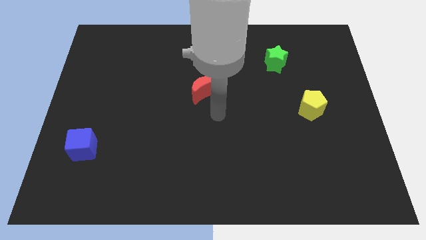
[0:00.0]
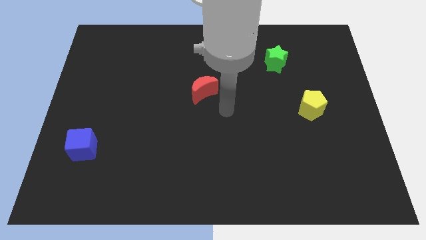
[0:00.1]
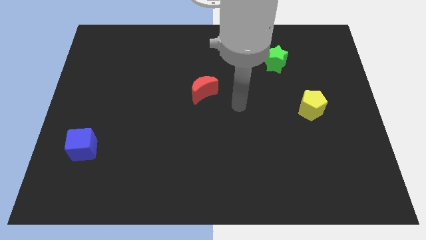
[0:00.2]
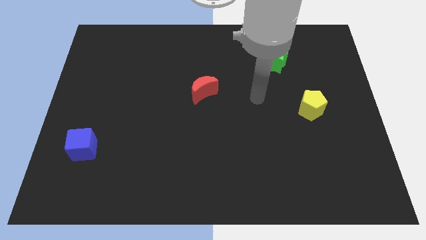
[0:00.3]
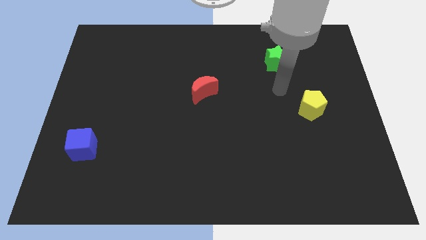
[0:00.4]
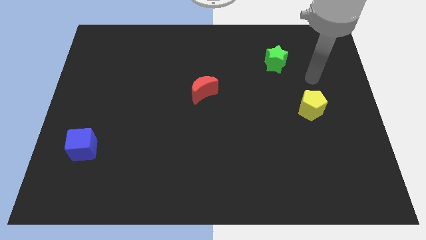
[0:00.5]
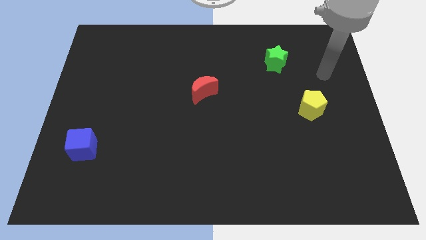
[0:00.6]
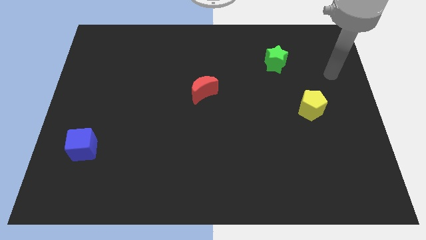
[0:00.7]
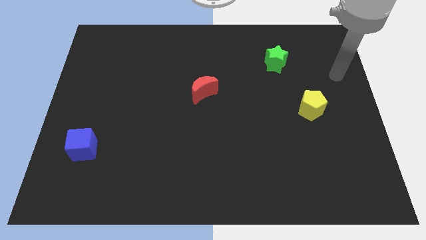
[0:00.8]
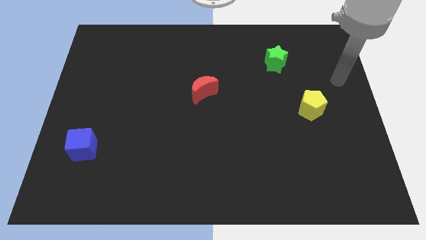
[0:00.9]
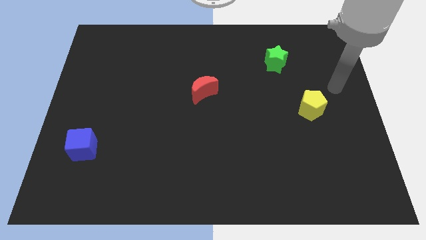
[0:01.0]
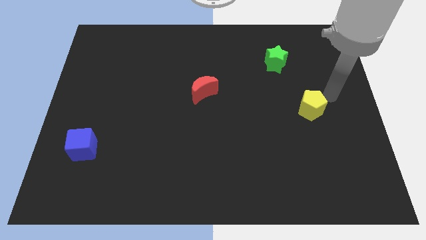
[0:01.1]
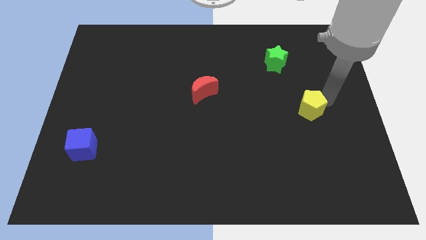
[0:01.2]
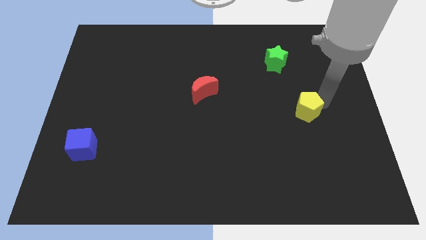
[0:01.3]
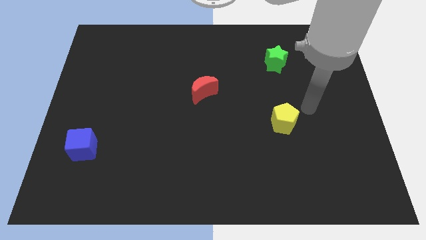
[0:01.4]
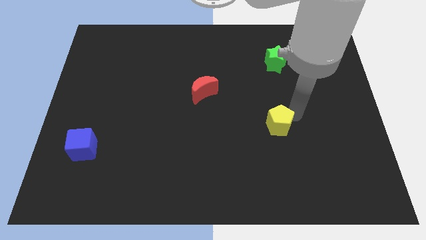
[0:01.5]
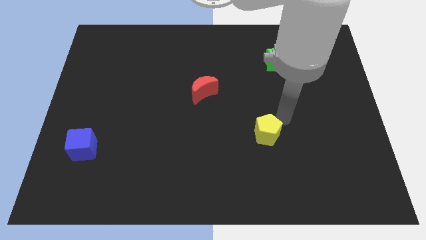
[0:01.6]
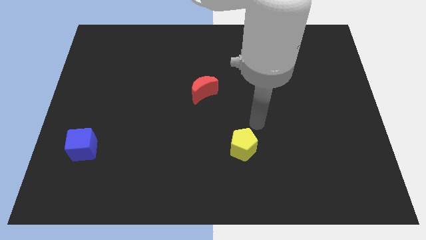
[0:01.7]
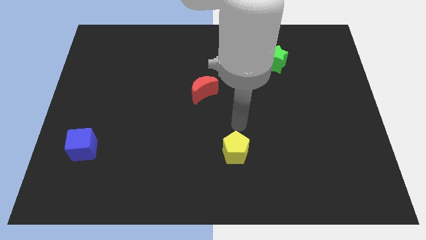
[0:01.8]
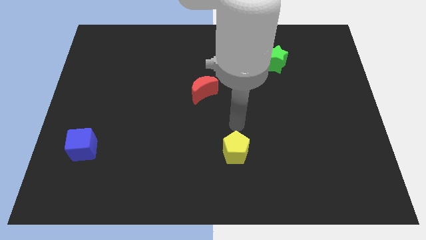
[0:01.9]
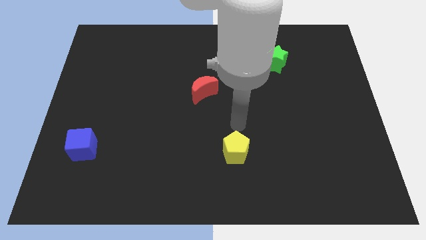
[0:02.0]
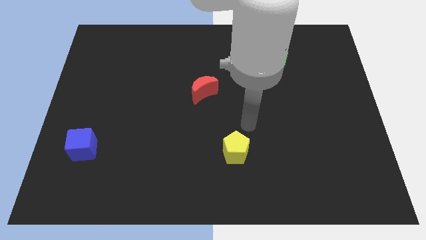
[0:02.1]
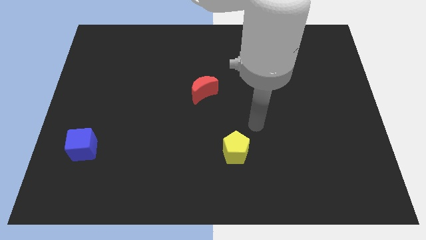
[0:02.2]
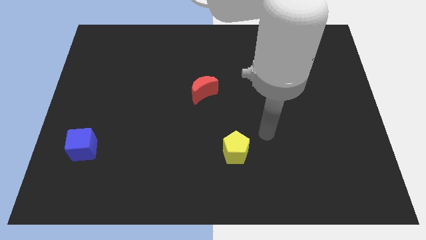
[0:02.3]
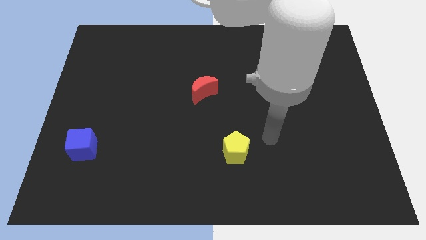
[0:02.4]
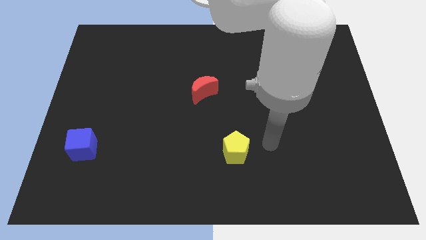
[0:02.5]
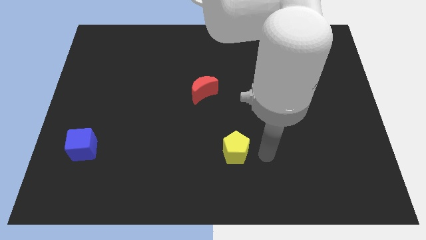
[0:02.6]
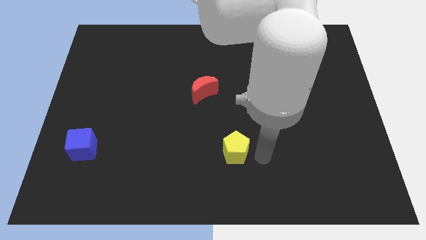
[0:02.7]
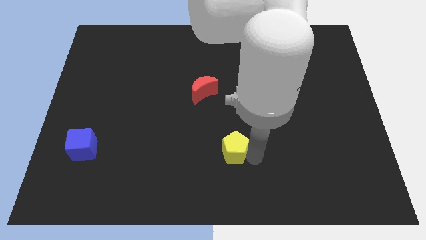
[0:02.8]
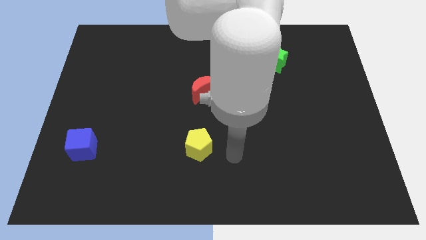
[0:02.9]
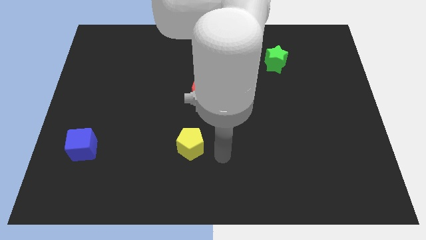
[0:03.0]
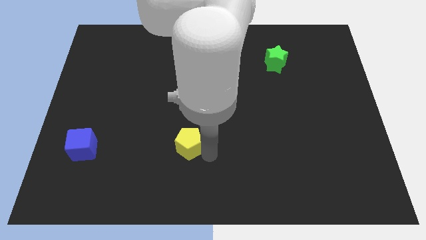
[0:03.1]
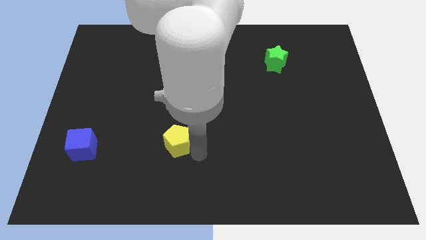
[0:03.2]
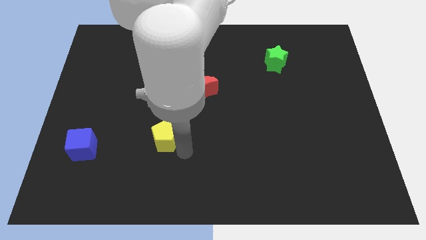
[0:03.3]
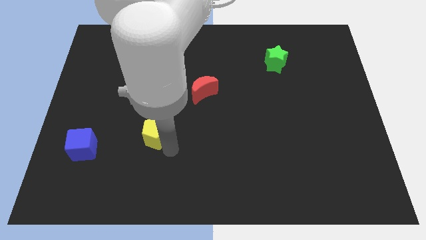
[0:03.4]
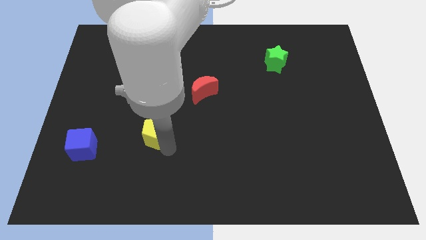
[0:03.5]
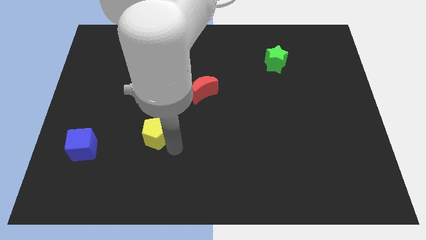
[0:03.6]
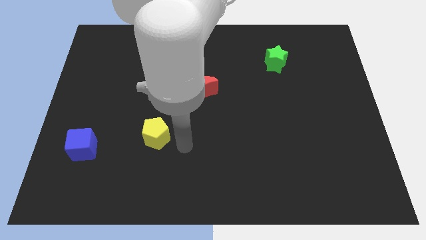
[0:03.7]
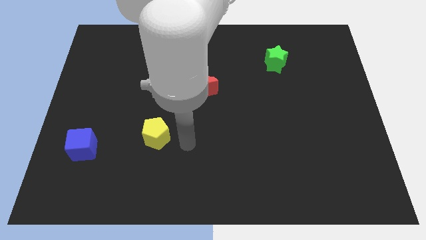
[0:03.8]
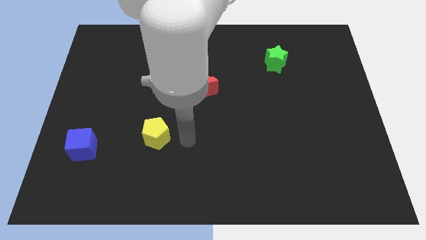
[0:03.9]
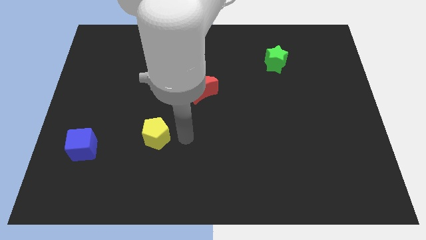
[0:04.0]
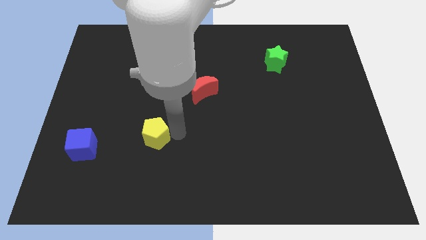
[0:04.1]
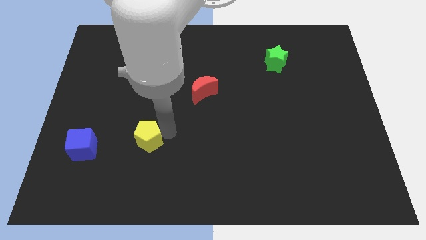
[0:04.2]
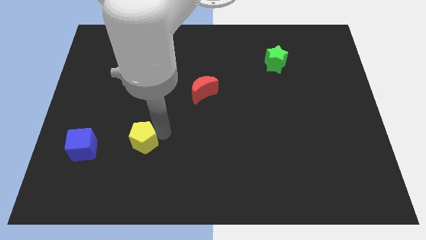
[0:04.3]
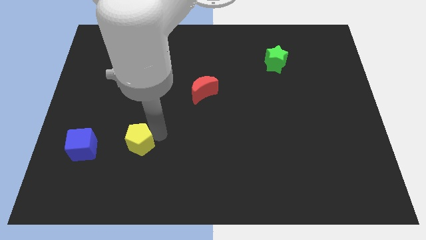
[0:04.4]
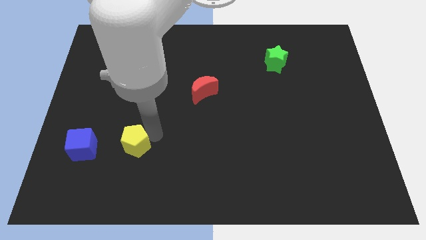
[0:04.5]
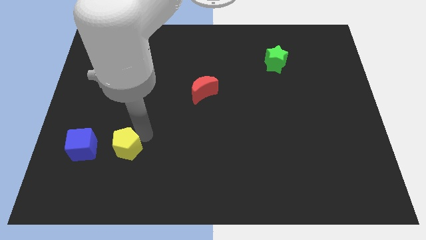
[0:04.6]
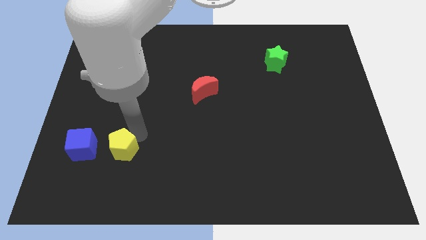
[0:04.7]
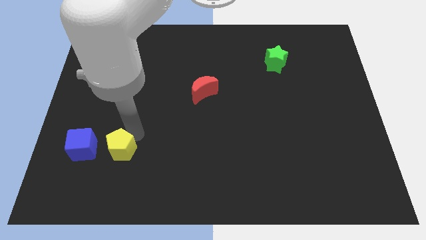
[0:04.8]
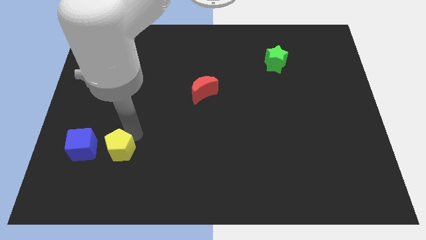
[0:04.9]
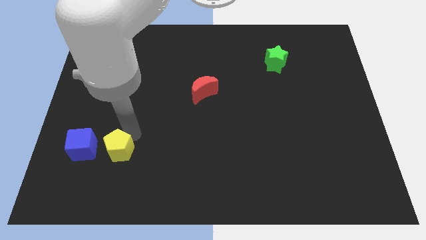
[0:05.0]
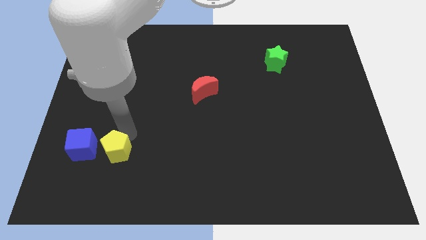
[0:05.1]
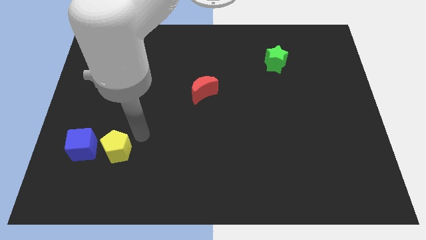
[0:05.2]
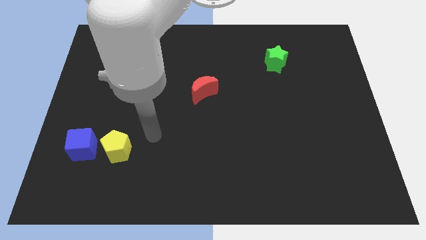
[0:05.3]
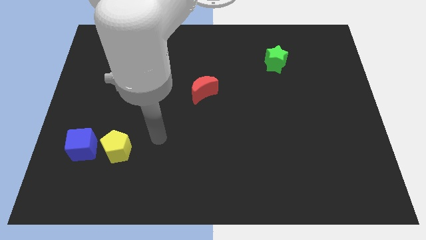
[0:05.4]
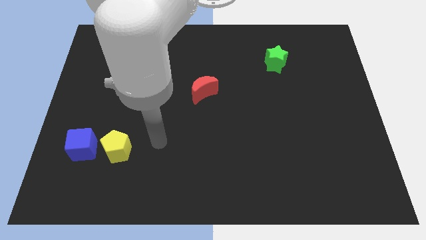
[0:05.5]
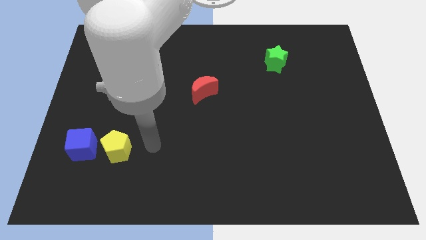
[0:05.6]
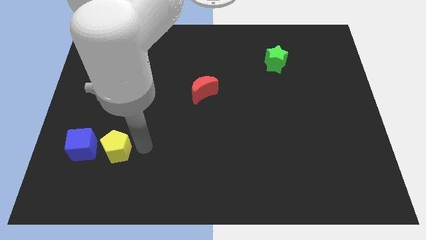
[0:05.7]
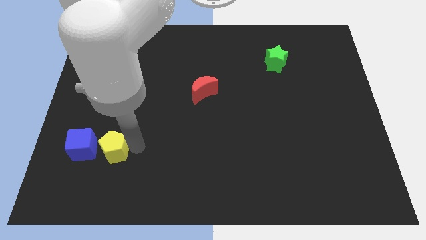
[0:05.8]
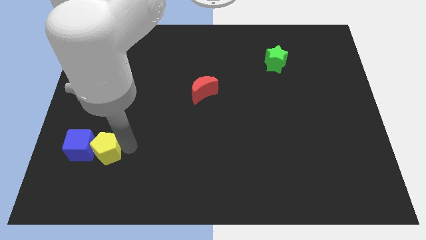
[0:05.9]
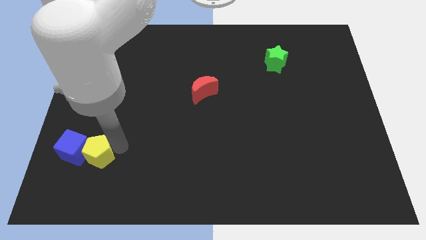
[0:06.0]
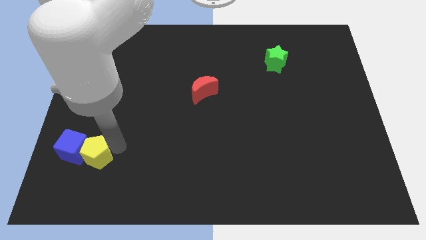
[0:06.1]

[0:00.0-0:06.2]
slide the yellow block towards the cube

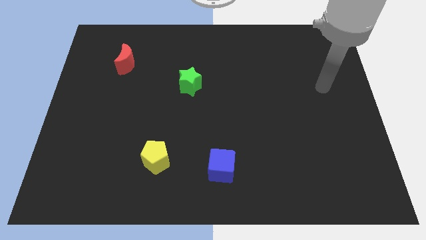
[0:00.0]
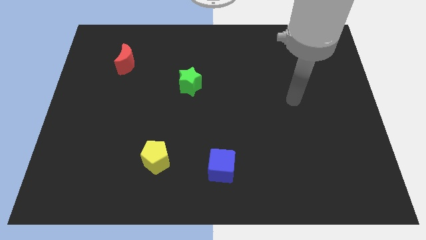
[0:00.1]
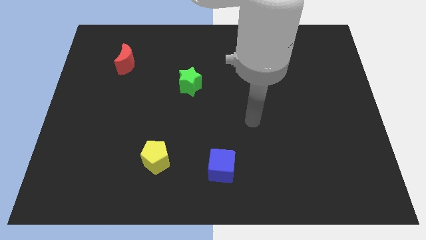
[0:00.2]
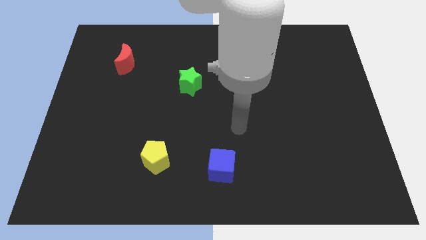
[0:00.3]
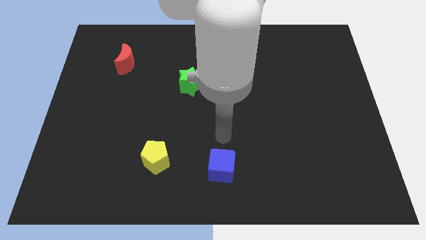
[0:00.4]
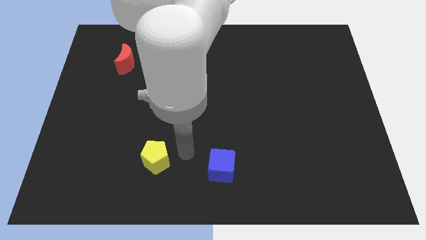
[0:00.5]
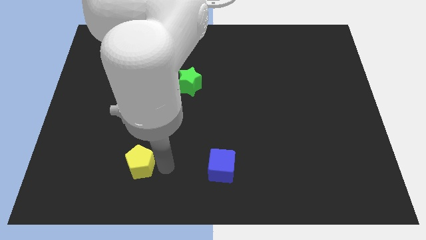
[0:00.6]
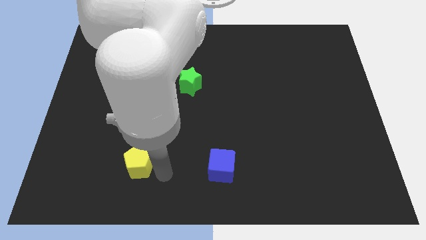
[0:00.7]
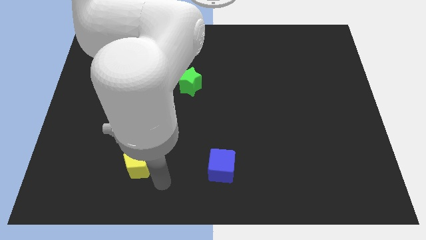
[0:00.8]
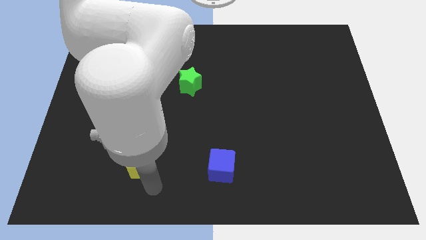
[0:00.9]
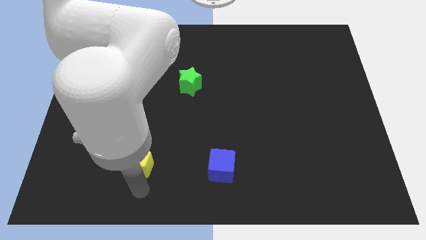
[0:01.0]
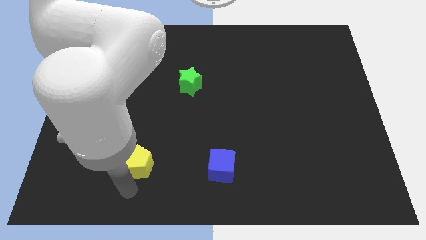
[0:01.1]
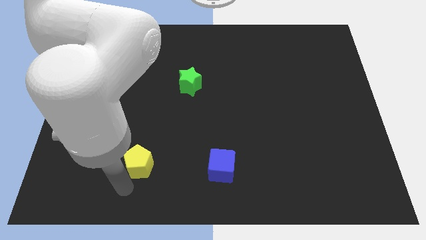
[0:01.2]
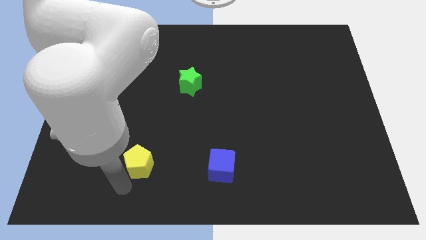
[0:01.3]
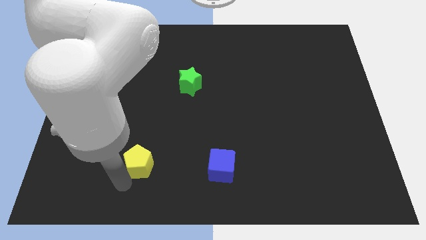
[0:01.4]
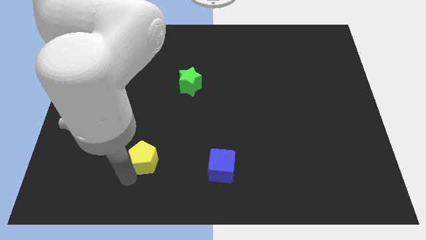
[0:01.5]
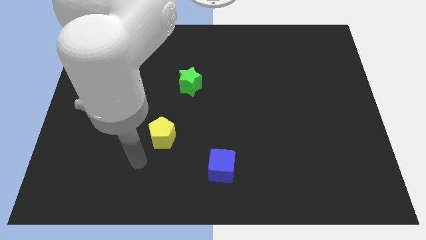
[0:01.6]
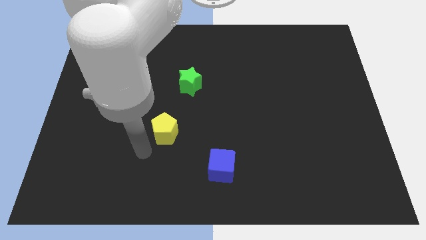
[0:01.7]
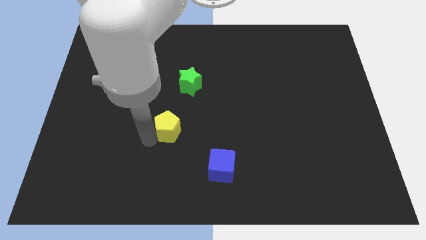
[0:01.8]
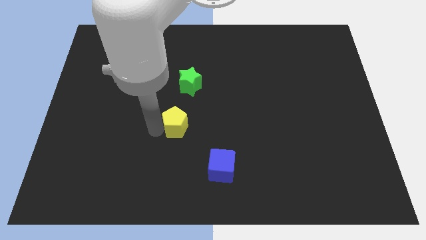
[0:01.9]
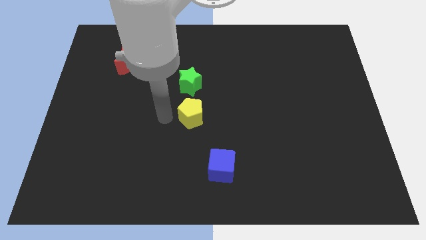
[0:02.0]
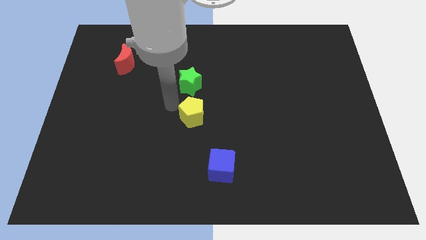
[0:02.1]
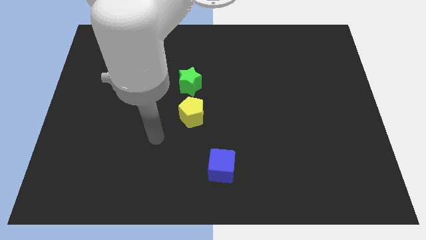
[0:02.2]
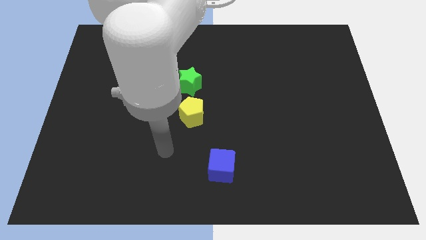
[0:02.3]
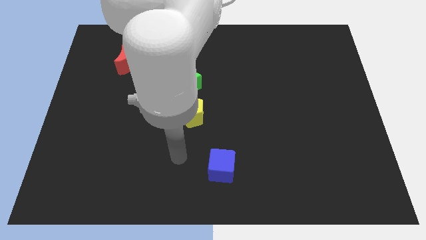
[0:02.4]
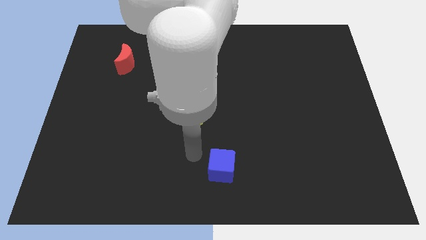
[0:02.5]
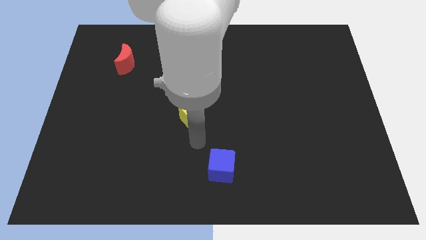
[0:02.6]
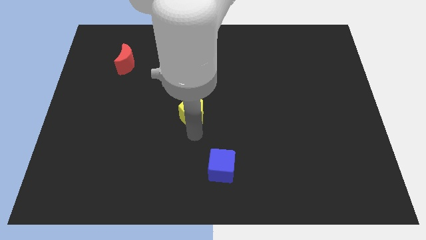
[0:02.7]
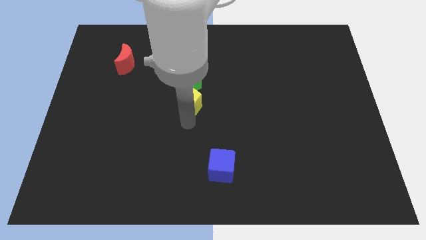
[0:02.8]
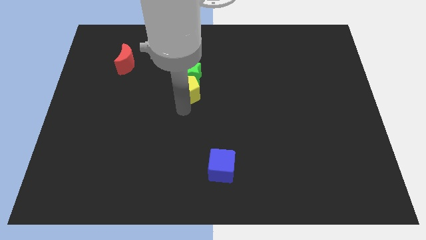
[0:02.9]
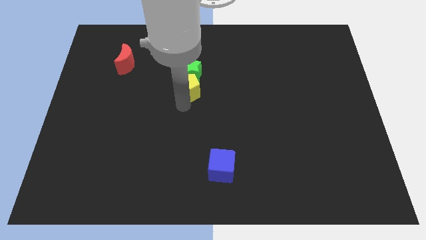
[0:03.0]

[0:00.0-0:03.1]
move the yellow pentagon close to the green block
